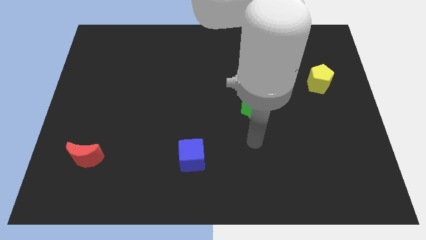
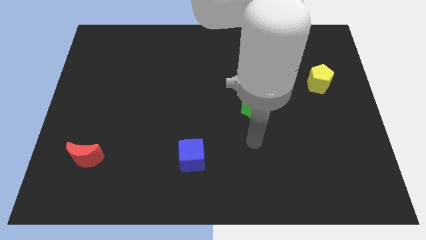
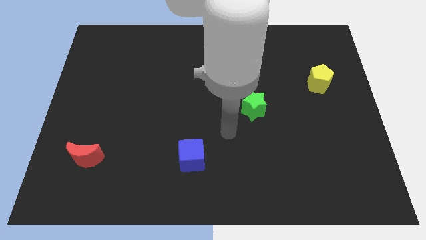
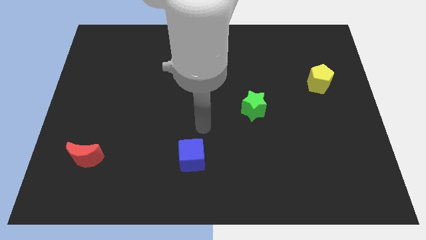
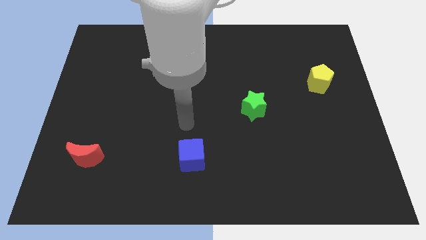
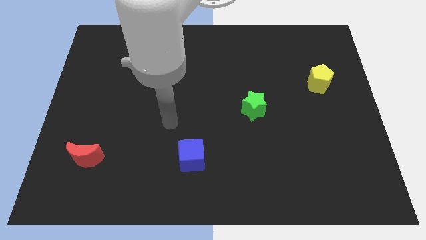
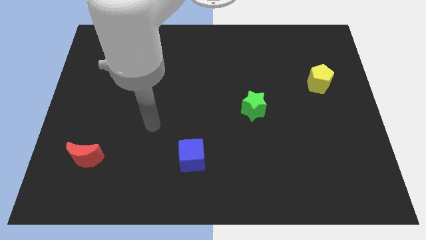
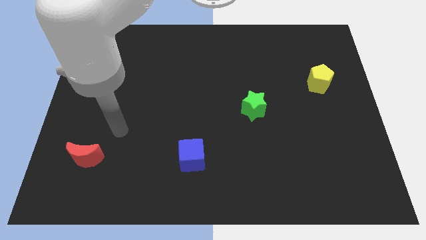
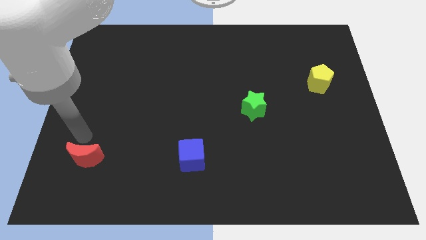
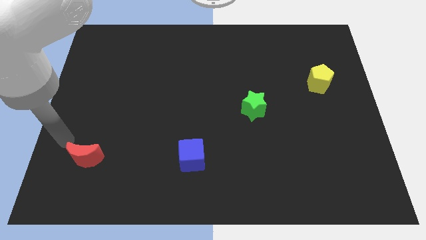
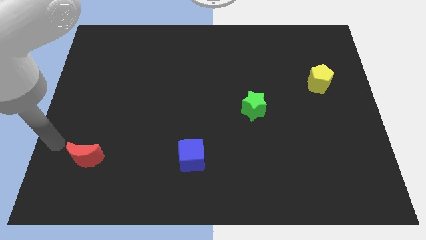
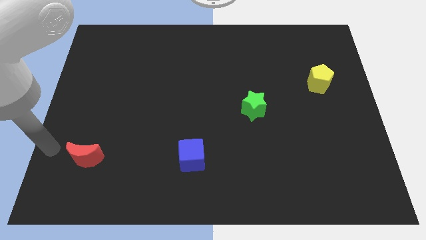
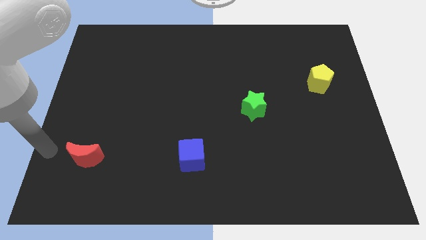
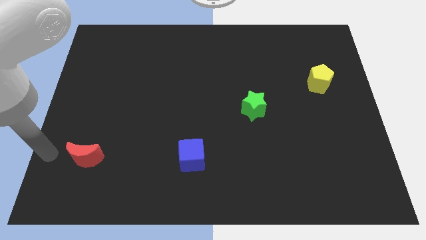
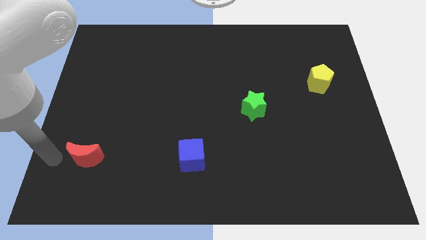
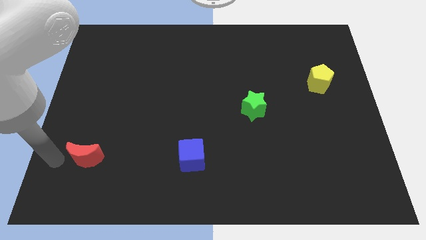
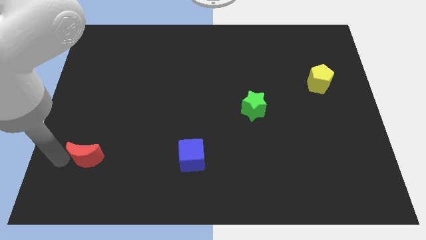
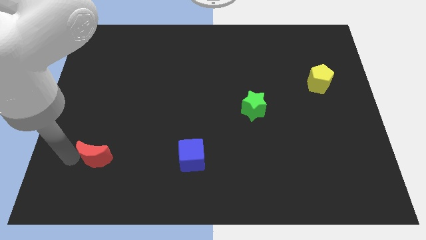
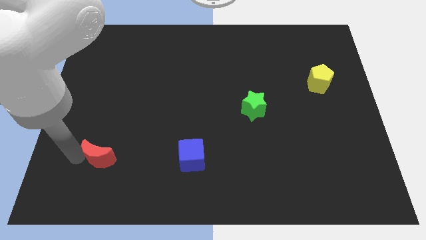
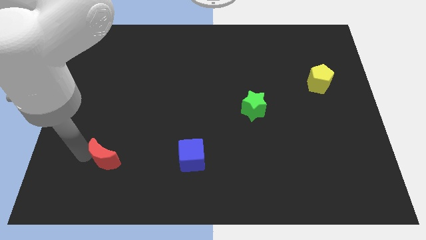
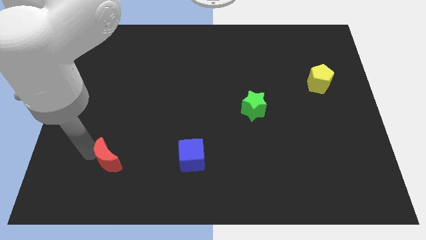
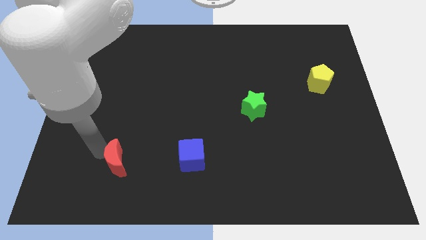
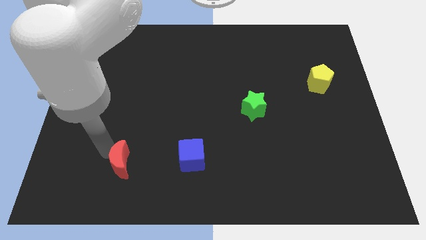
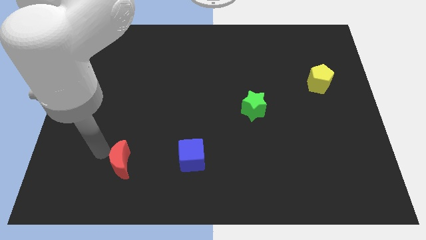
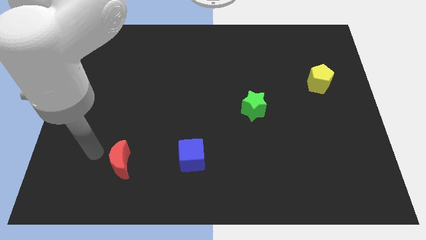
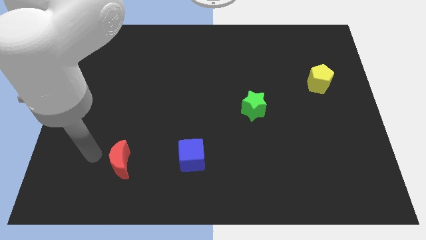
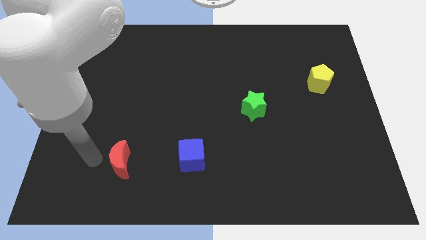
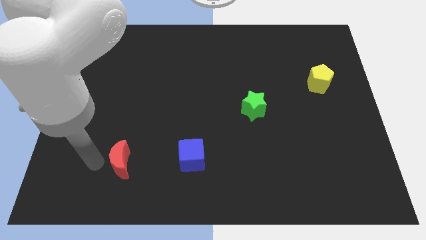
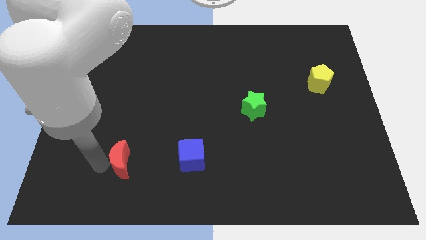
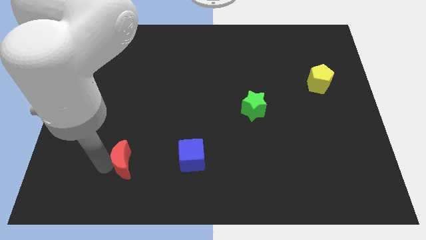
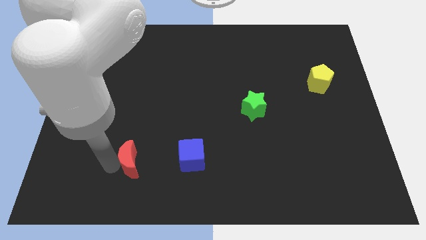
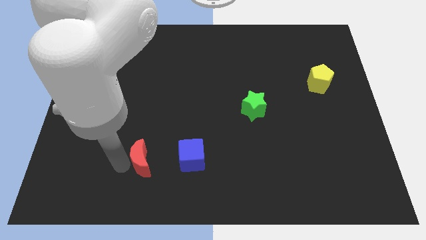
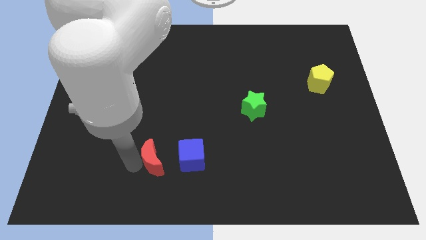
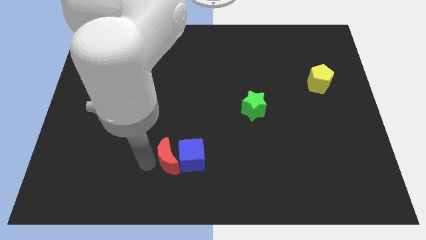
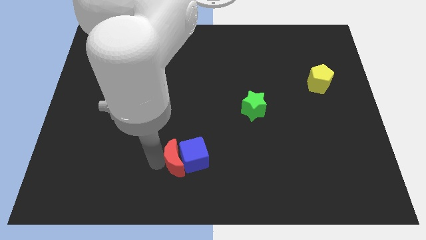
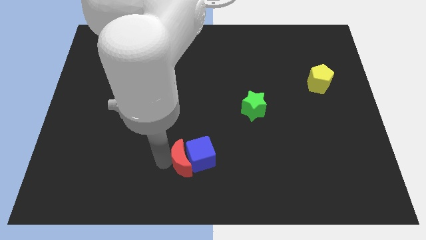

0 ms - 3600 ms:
push the red moon next to the blue cube

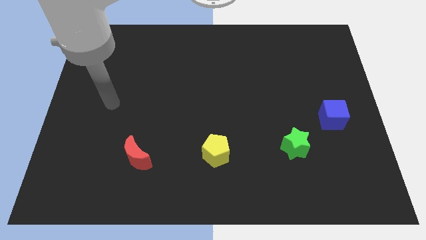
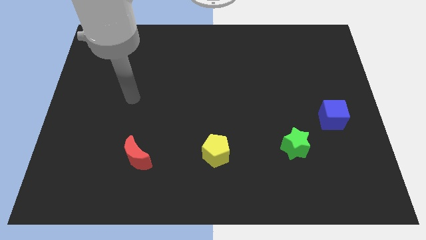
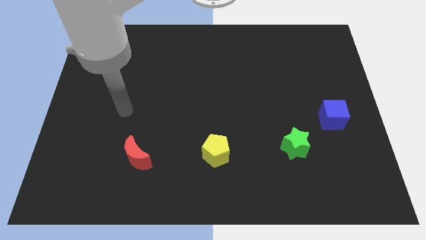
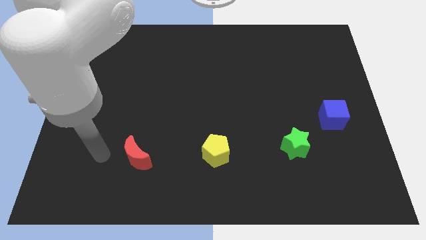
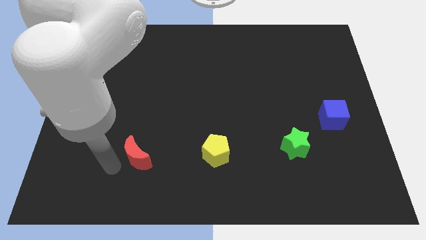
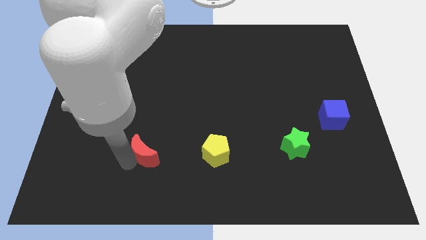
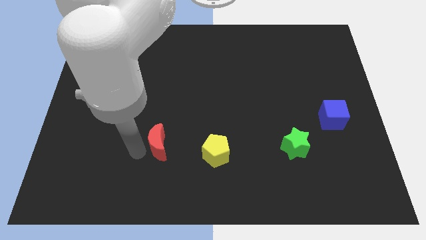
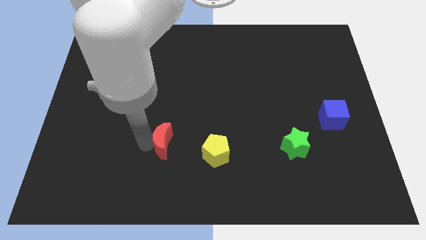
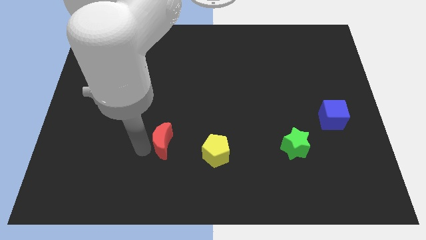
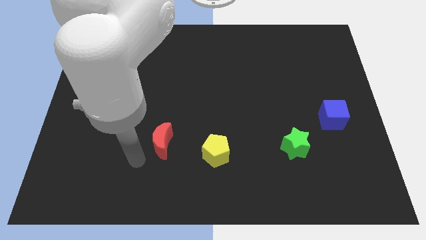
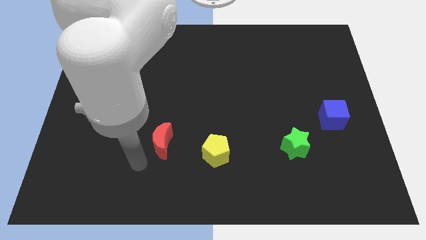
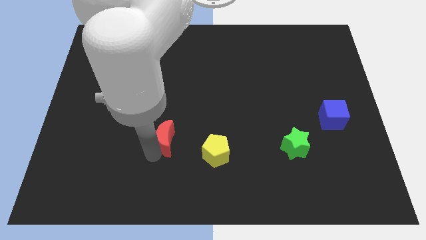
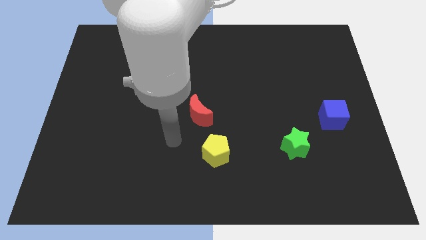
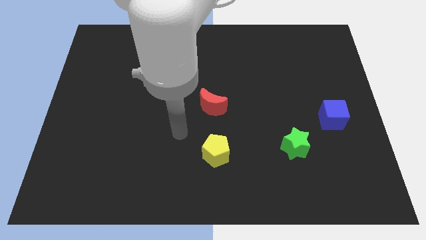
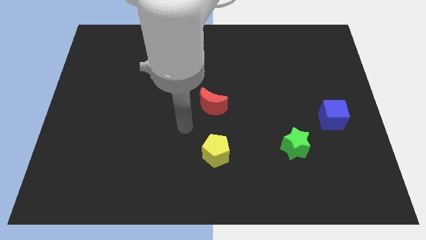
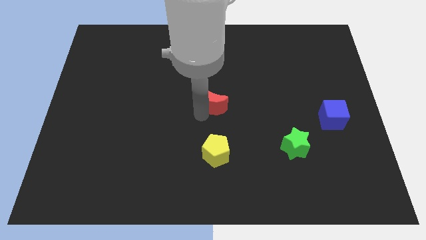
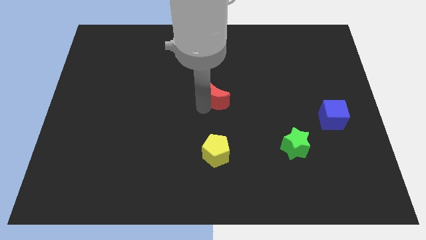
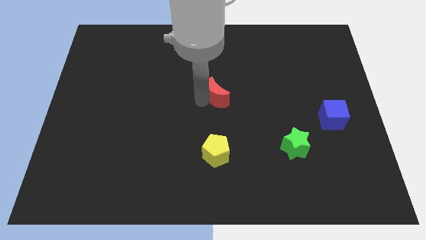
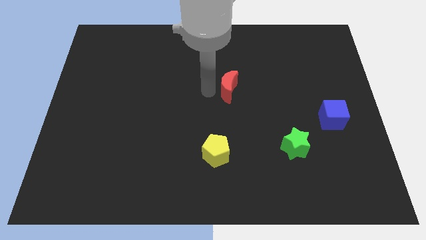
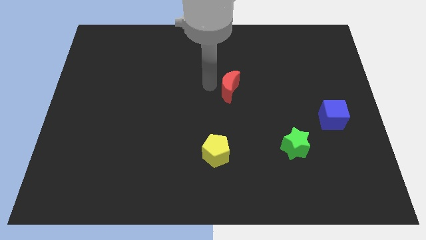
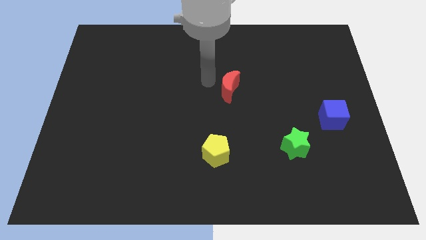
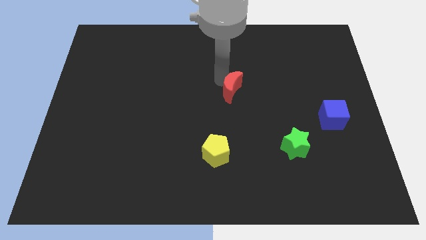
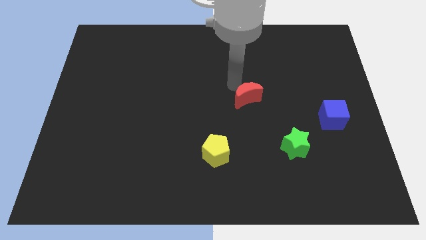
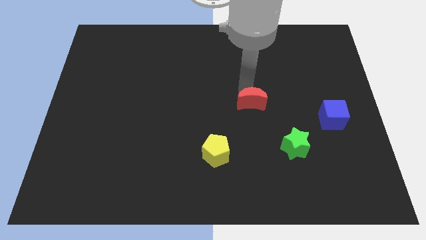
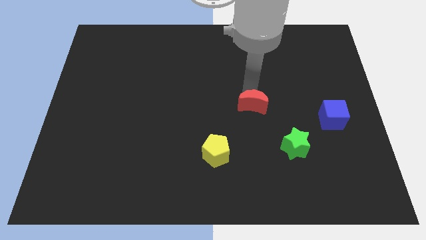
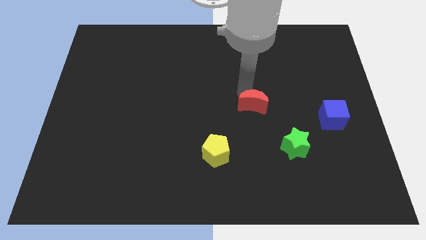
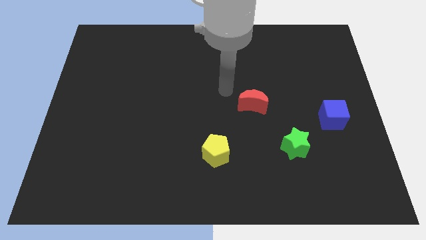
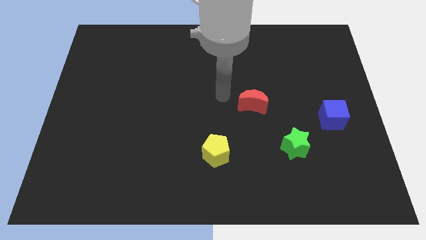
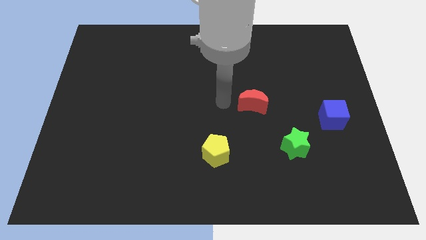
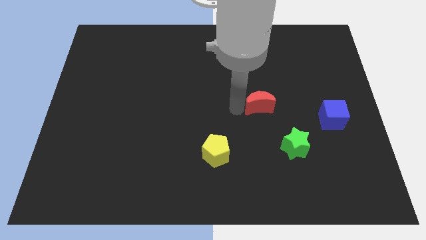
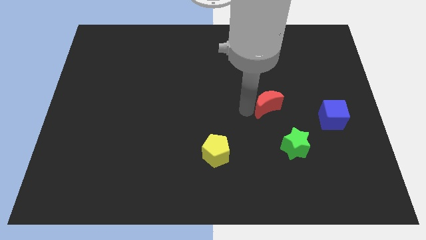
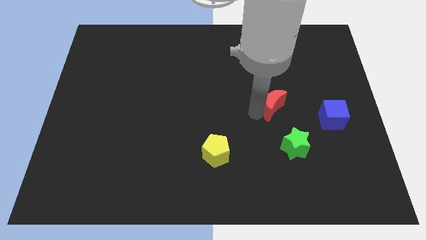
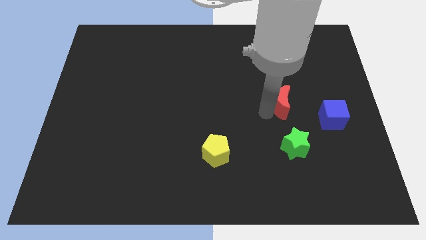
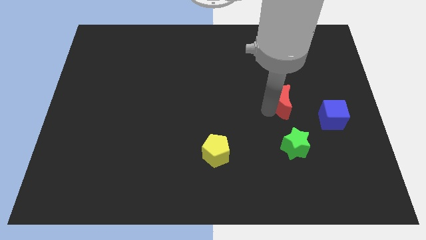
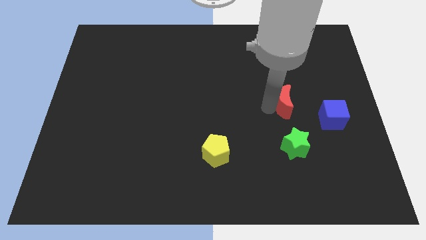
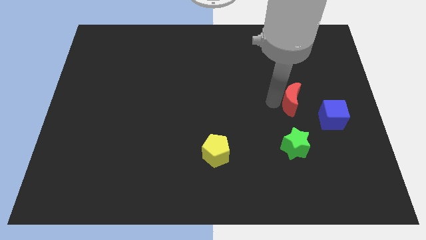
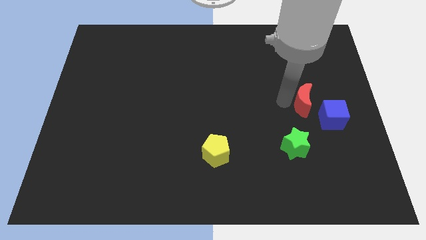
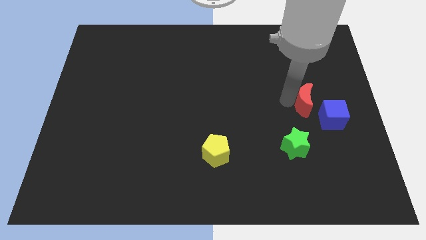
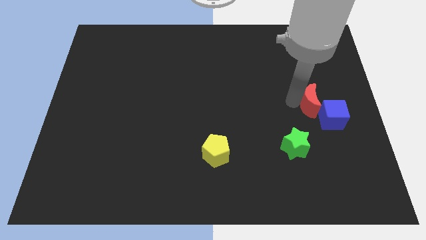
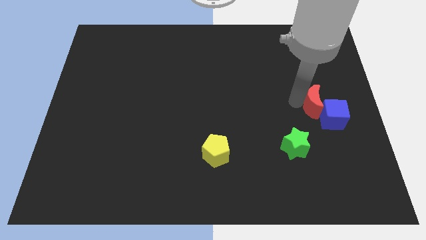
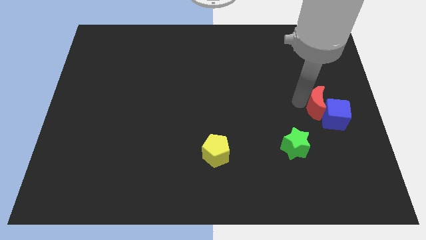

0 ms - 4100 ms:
move the red moon next to the blue block

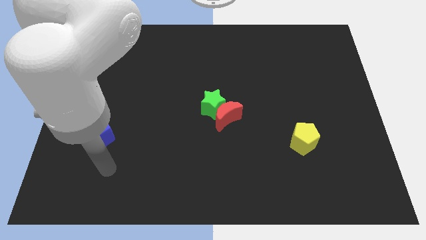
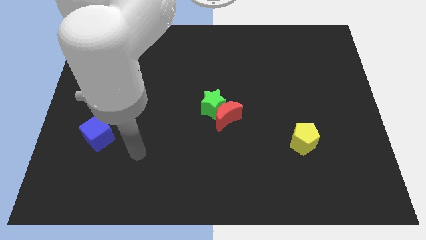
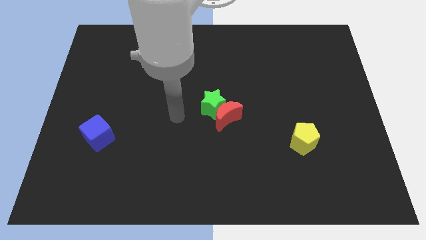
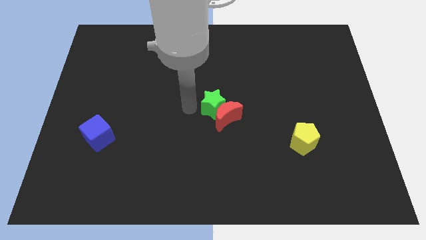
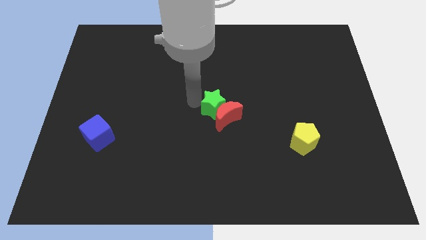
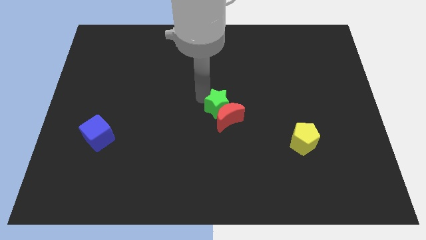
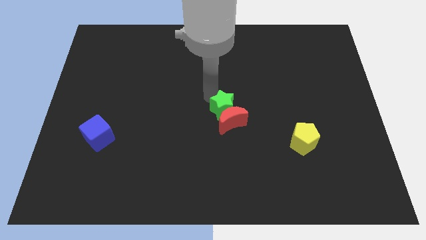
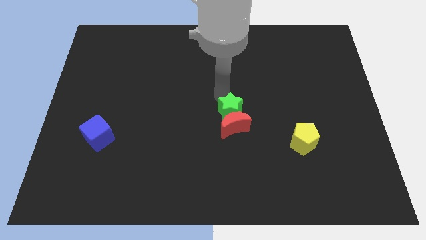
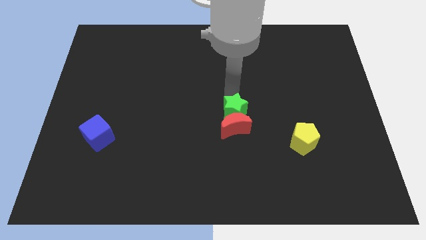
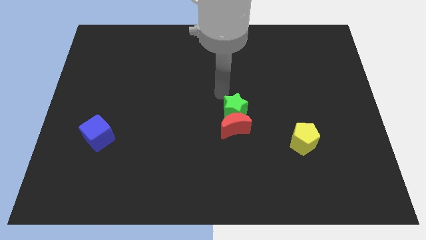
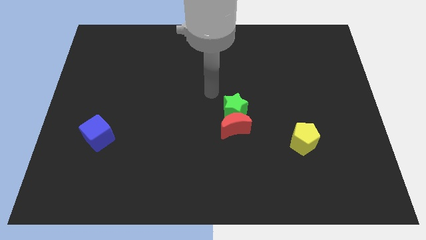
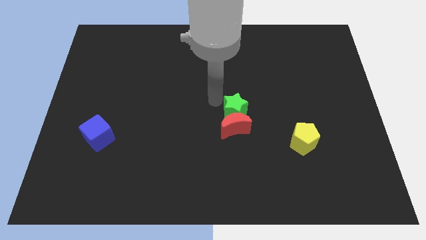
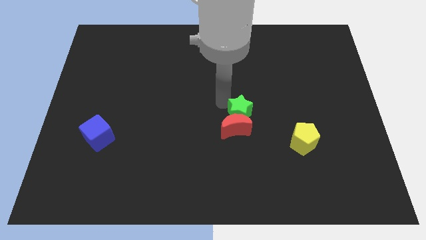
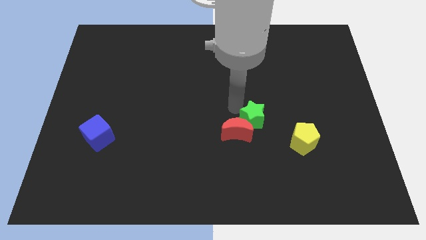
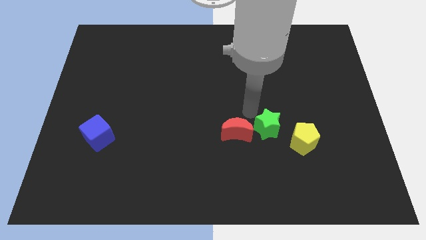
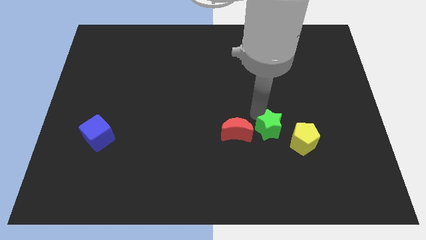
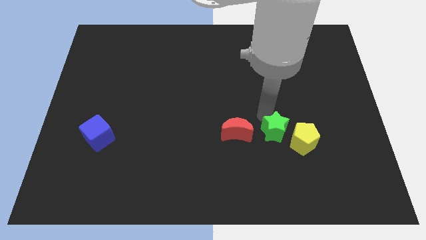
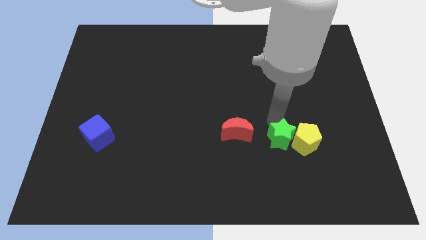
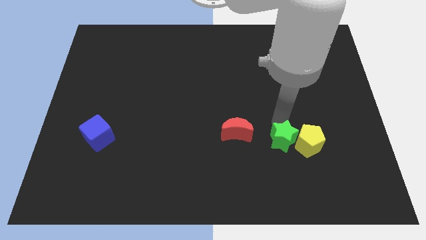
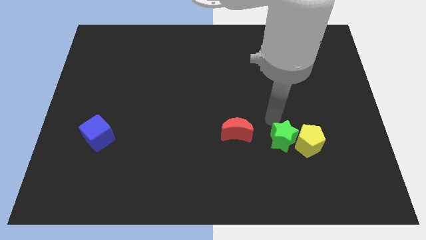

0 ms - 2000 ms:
push the green block close to the pentagon
